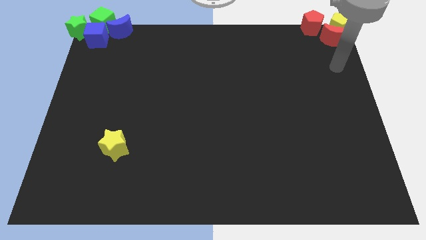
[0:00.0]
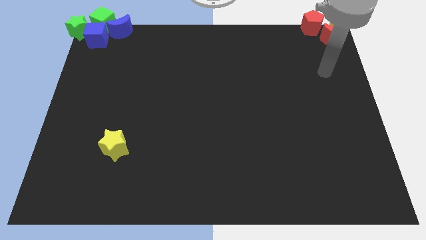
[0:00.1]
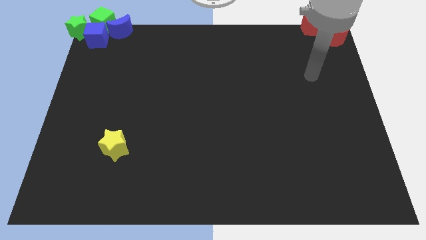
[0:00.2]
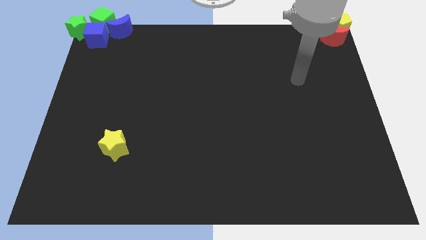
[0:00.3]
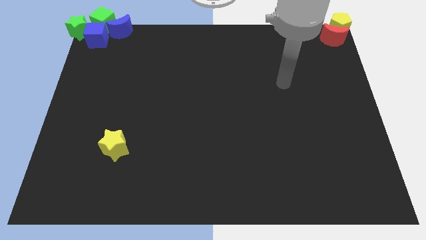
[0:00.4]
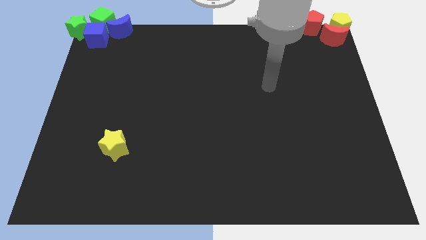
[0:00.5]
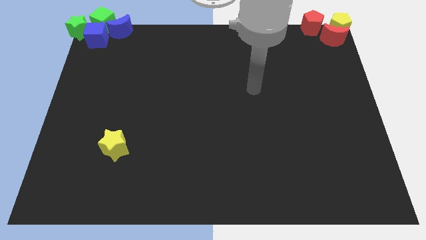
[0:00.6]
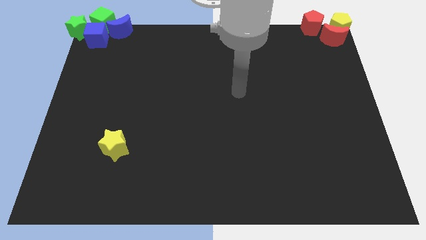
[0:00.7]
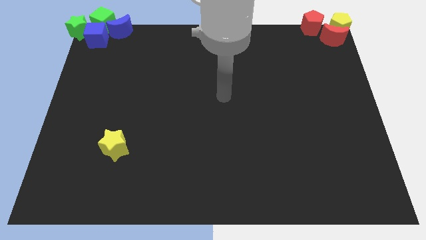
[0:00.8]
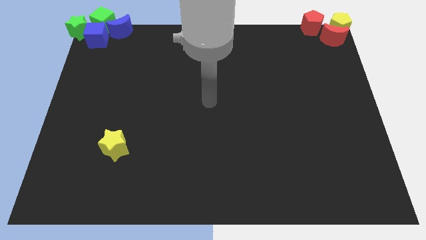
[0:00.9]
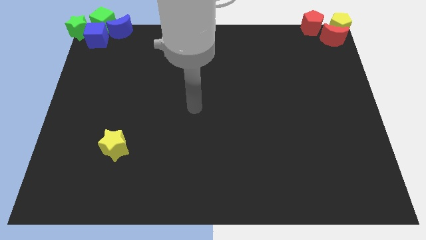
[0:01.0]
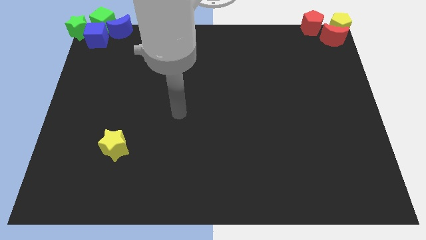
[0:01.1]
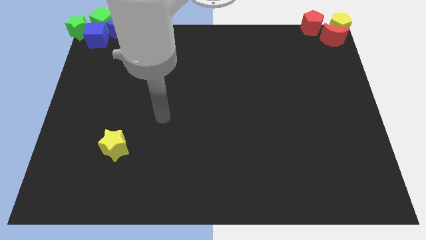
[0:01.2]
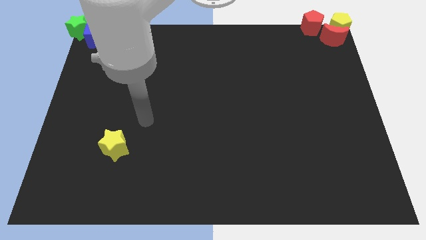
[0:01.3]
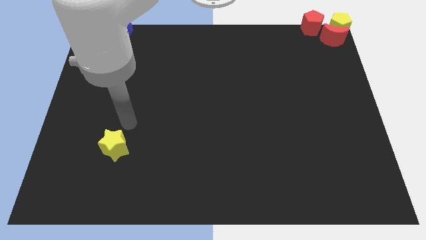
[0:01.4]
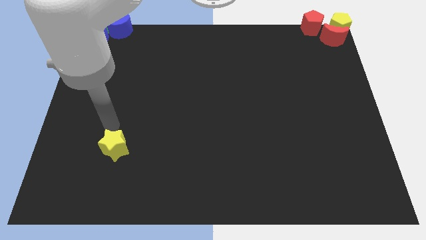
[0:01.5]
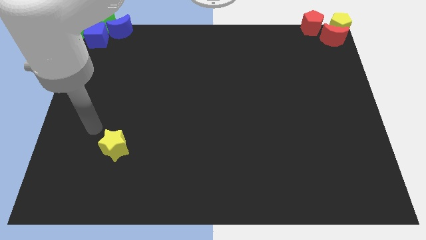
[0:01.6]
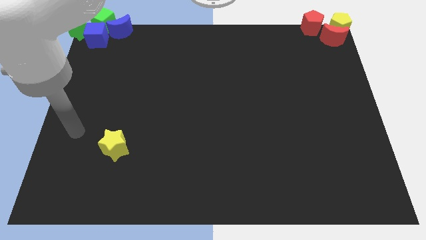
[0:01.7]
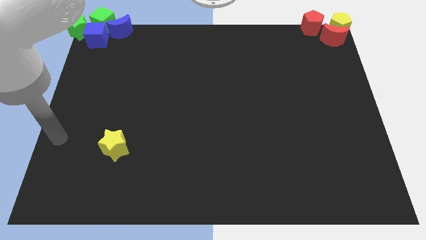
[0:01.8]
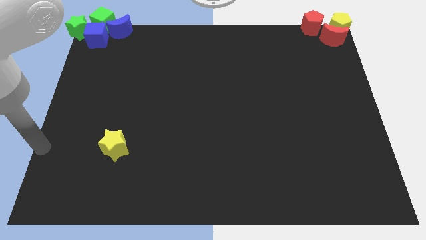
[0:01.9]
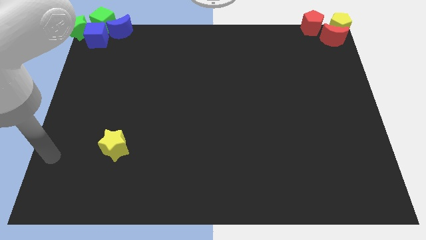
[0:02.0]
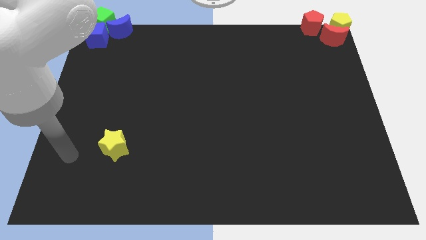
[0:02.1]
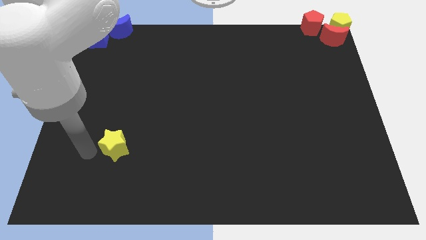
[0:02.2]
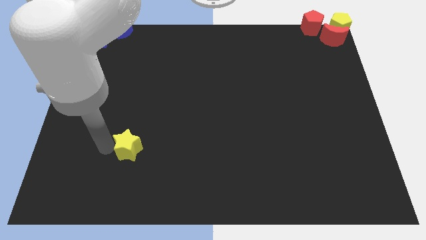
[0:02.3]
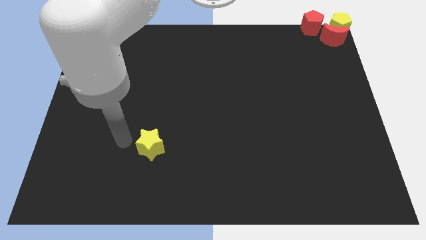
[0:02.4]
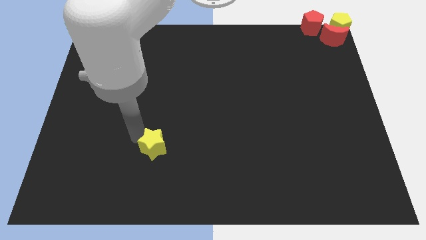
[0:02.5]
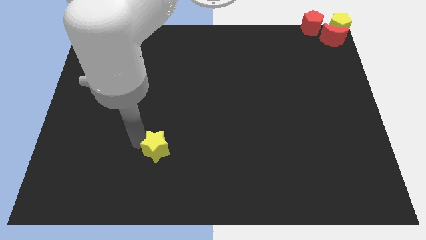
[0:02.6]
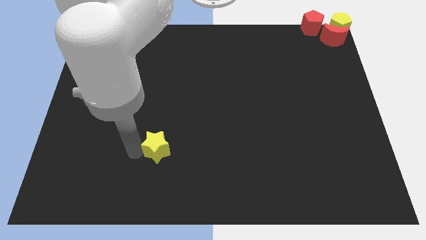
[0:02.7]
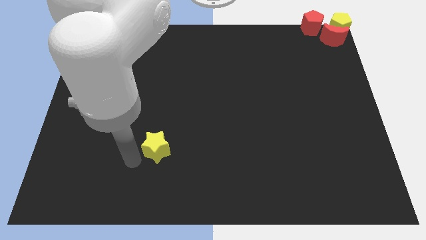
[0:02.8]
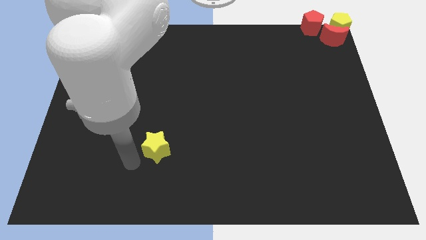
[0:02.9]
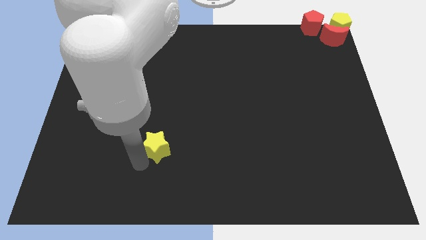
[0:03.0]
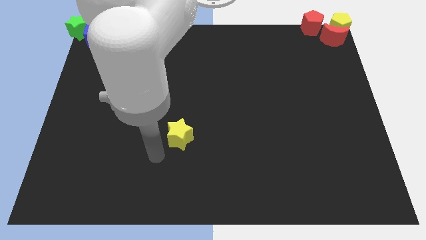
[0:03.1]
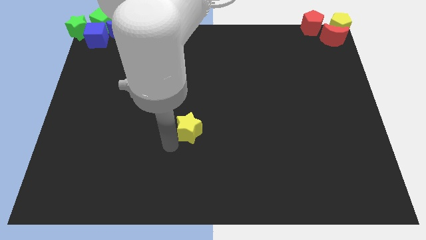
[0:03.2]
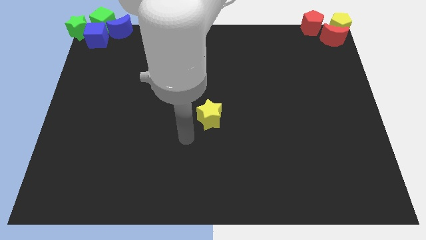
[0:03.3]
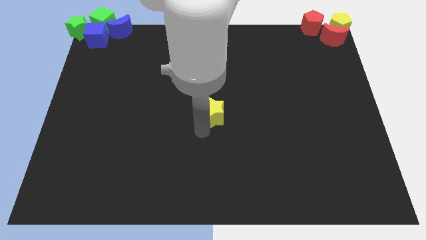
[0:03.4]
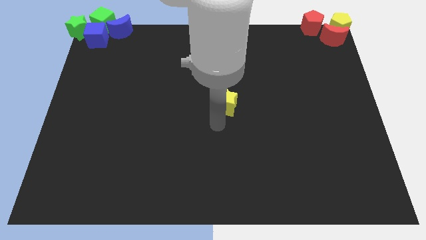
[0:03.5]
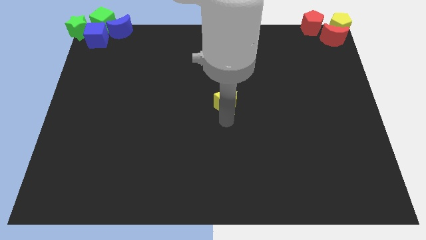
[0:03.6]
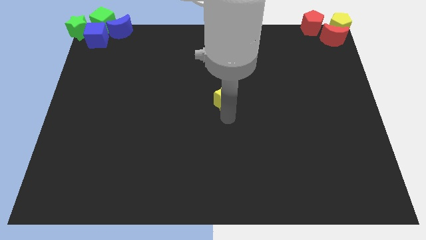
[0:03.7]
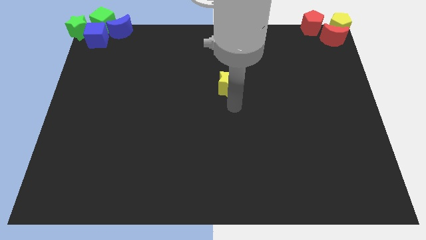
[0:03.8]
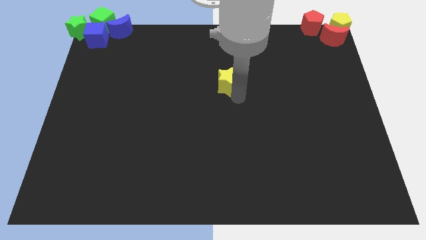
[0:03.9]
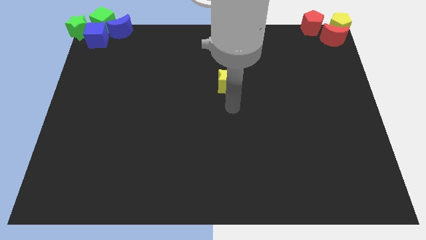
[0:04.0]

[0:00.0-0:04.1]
move the yellow star to the center of the board

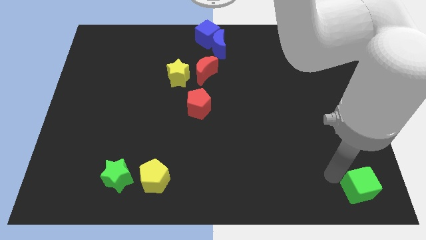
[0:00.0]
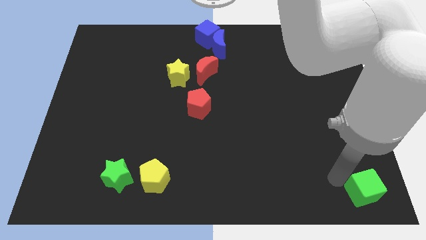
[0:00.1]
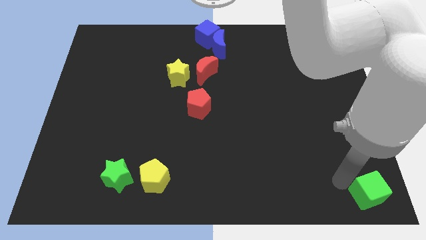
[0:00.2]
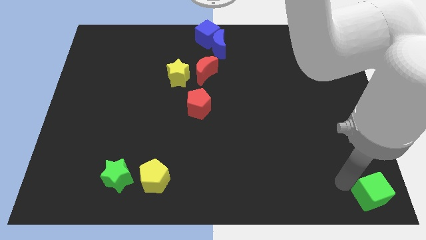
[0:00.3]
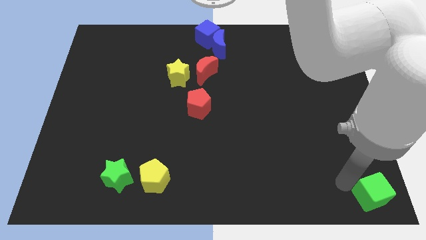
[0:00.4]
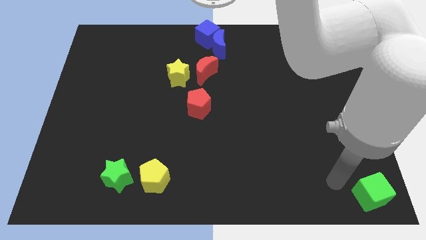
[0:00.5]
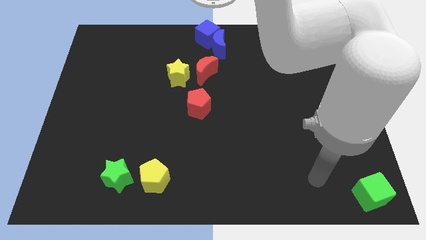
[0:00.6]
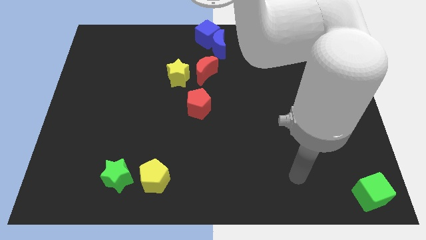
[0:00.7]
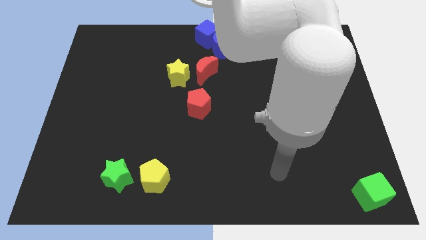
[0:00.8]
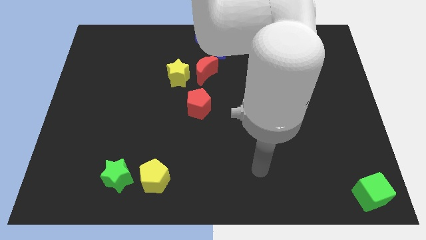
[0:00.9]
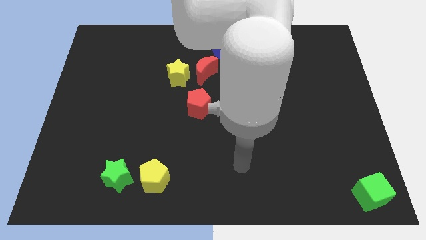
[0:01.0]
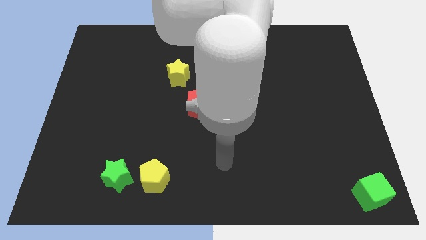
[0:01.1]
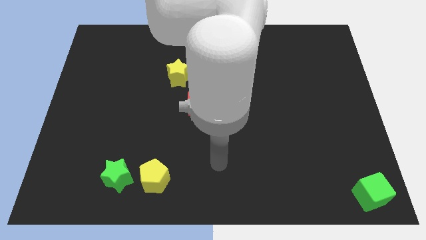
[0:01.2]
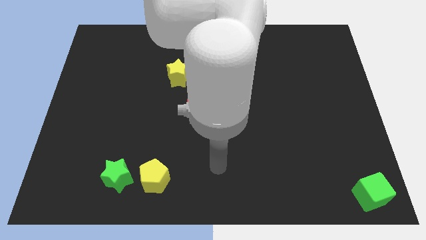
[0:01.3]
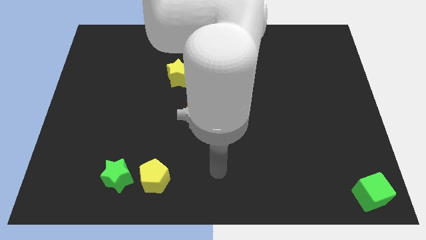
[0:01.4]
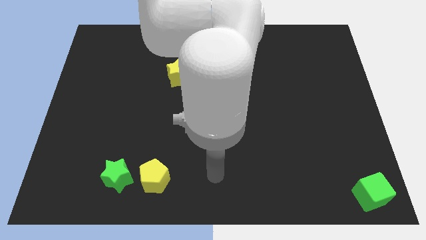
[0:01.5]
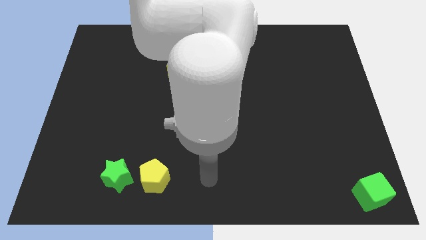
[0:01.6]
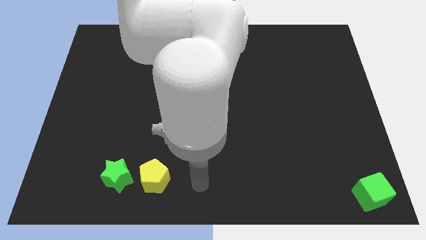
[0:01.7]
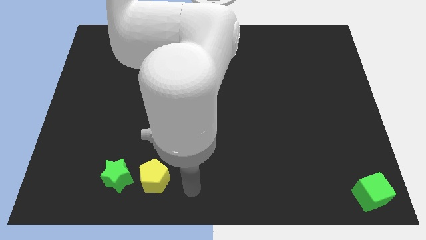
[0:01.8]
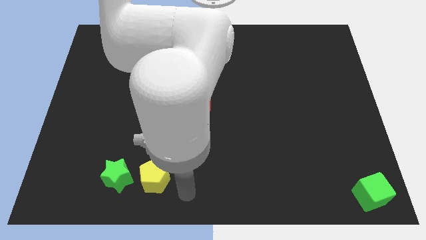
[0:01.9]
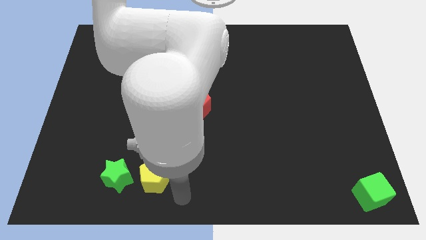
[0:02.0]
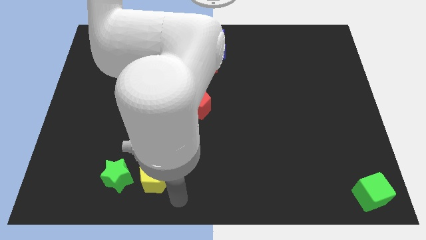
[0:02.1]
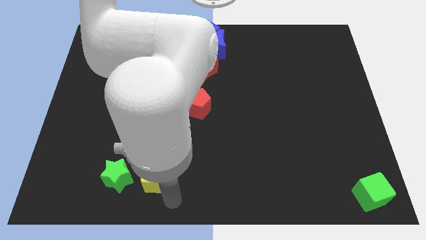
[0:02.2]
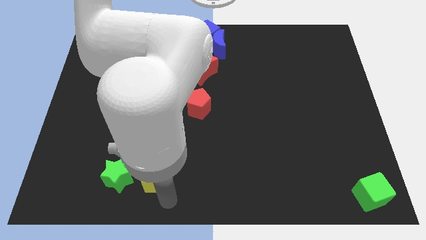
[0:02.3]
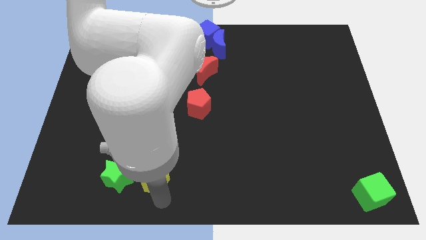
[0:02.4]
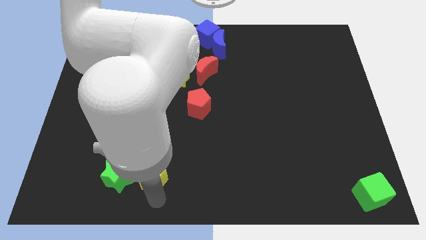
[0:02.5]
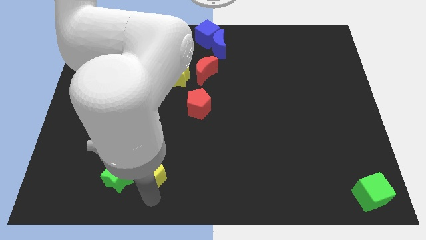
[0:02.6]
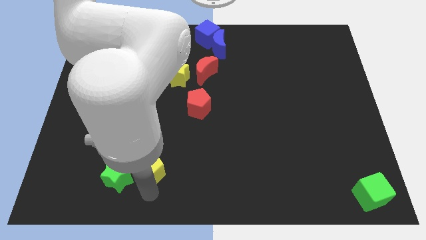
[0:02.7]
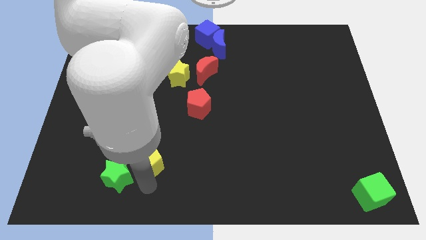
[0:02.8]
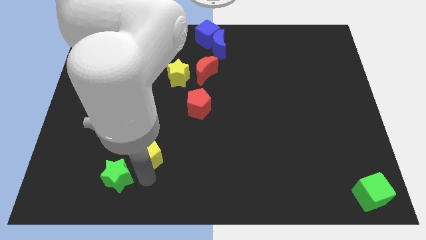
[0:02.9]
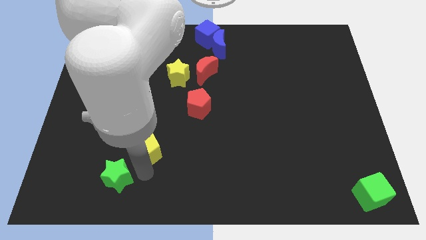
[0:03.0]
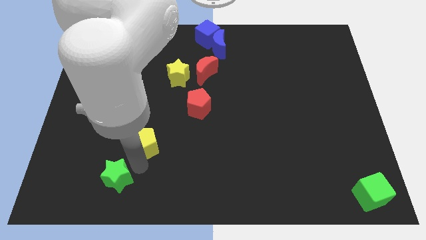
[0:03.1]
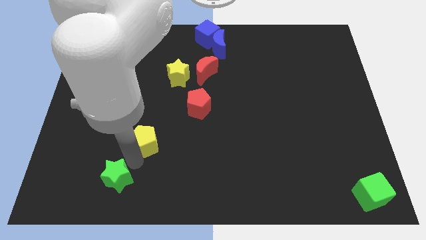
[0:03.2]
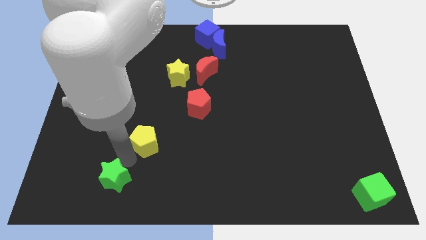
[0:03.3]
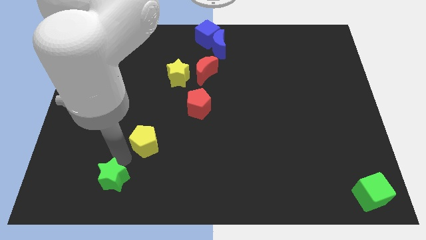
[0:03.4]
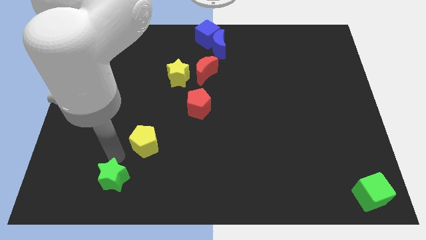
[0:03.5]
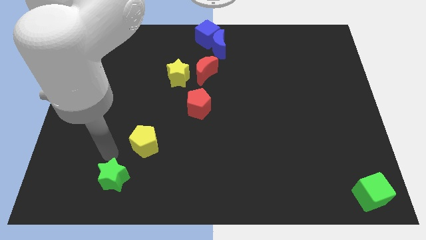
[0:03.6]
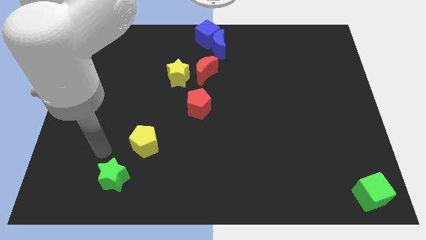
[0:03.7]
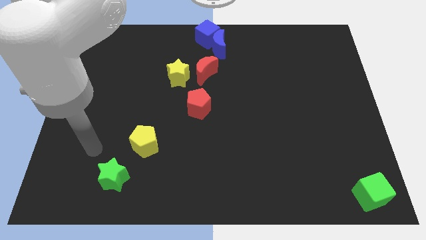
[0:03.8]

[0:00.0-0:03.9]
place the yellow pentagon diagonally top right to the green star

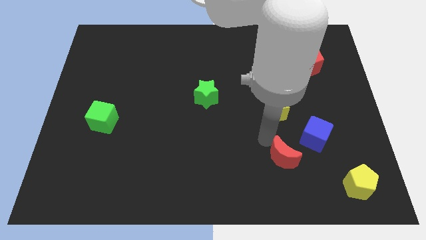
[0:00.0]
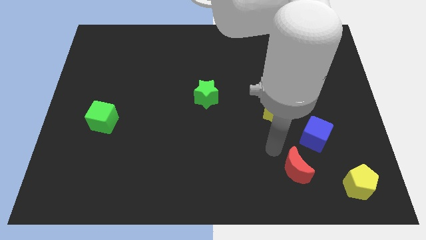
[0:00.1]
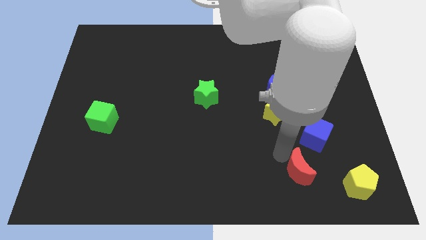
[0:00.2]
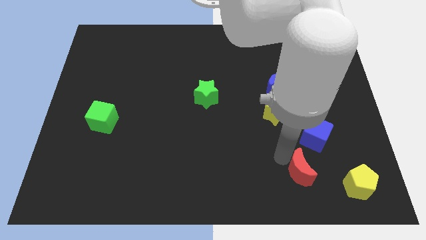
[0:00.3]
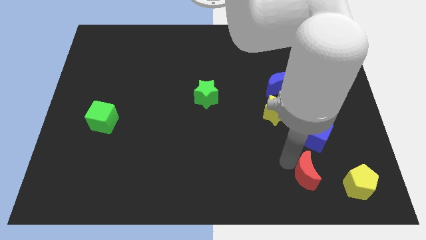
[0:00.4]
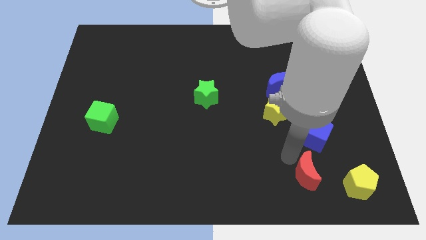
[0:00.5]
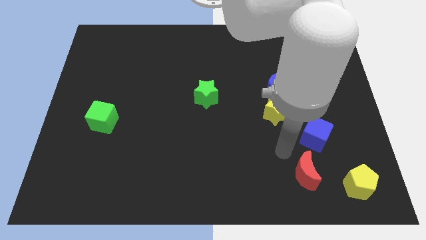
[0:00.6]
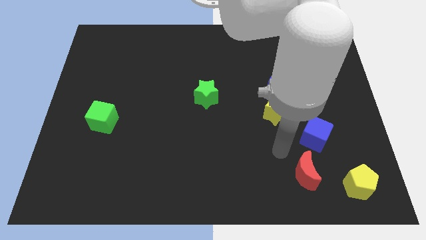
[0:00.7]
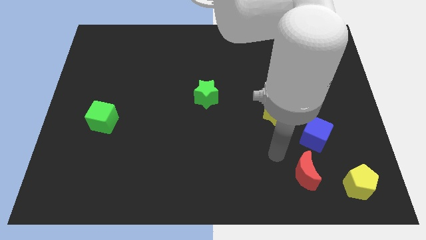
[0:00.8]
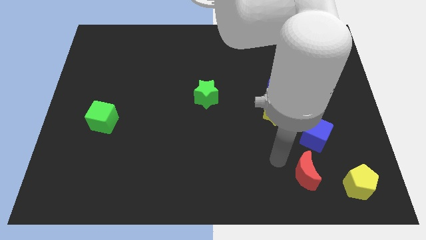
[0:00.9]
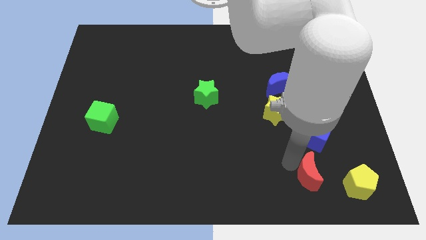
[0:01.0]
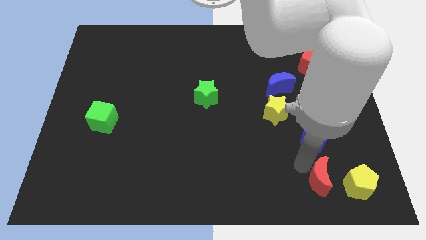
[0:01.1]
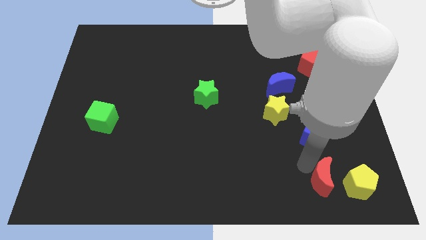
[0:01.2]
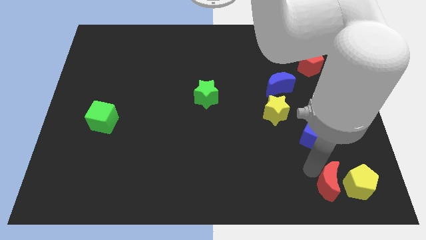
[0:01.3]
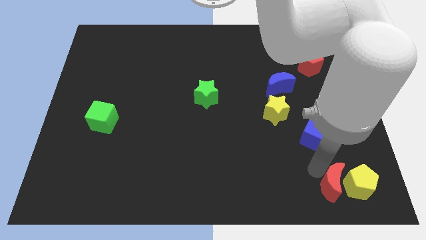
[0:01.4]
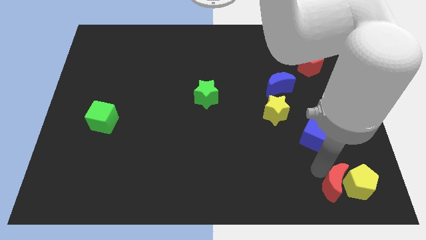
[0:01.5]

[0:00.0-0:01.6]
move the red moon close to the yellow pentagon
